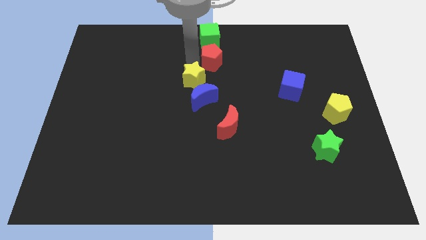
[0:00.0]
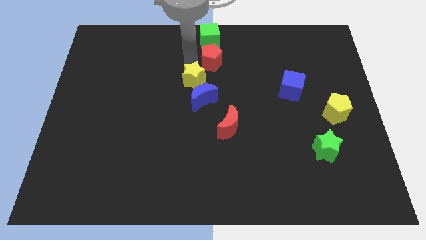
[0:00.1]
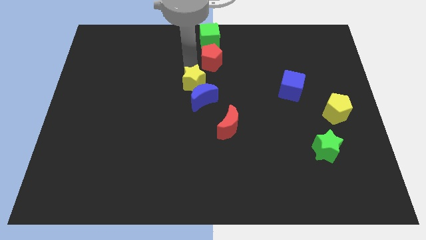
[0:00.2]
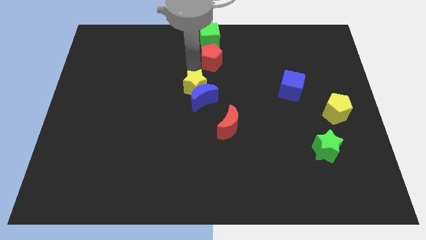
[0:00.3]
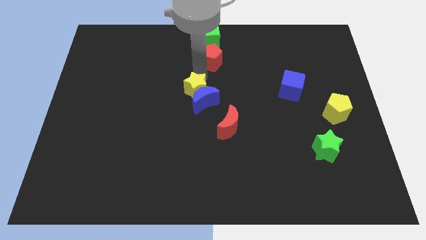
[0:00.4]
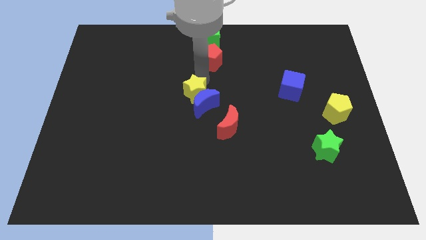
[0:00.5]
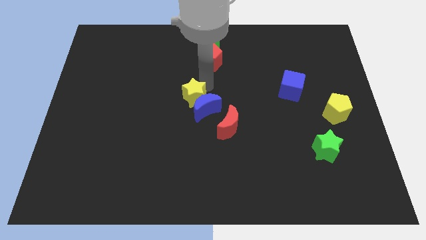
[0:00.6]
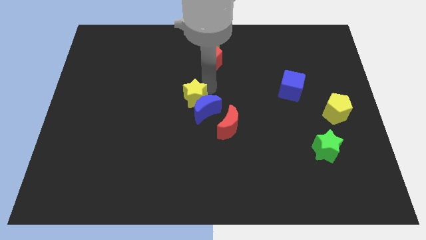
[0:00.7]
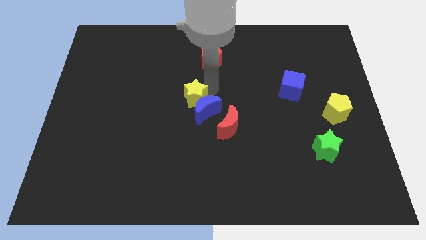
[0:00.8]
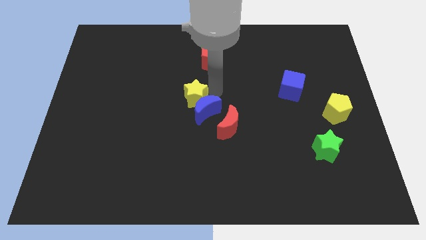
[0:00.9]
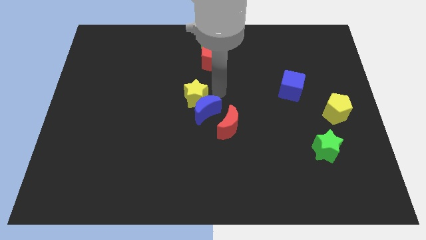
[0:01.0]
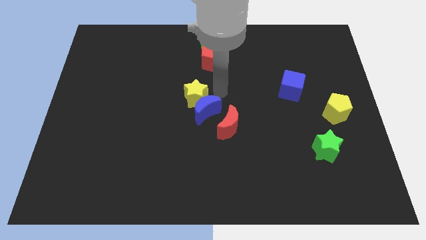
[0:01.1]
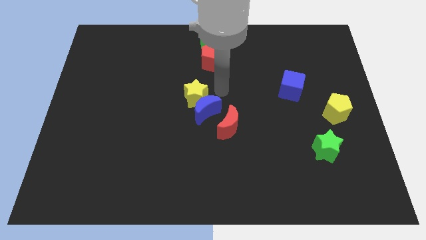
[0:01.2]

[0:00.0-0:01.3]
push the yellow star downwards

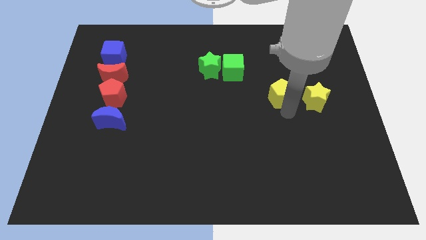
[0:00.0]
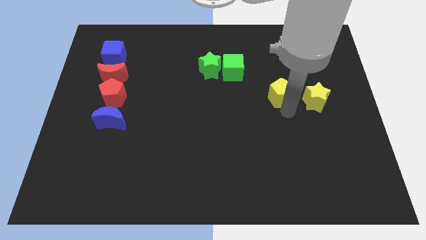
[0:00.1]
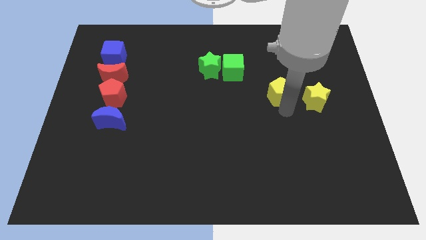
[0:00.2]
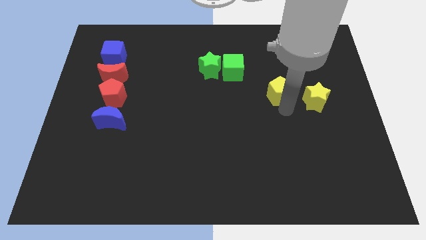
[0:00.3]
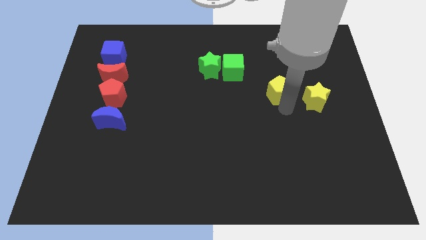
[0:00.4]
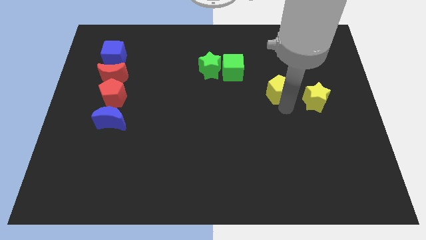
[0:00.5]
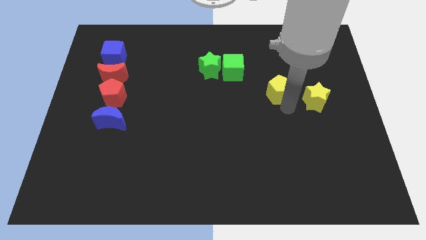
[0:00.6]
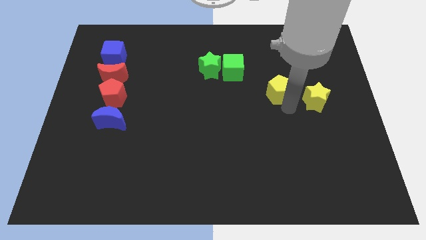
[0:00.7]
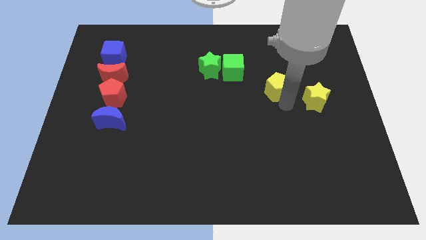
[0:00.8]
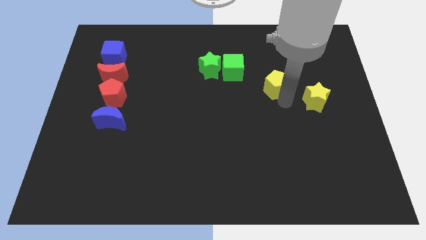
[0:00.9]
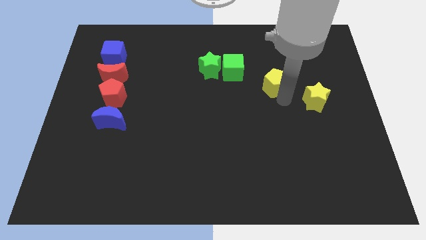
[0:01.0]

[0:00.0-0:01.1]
move the yellow pentagon to the top of the board

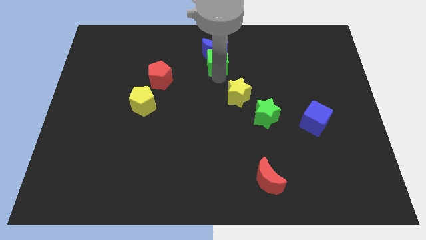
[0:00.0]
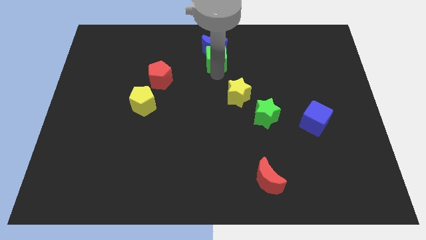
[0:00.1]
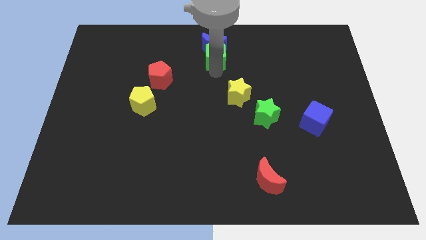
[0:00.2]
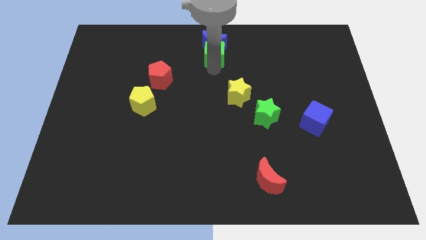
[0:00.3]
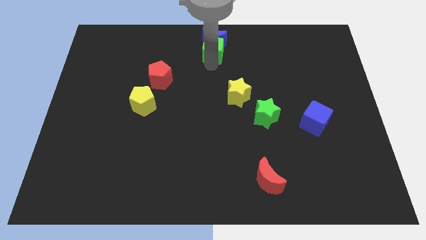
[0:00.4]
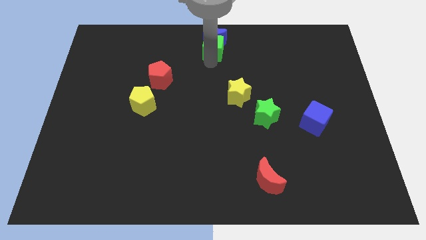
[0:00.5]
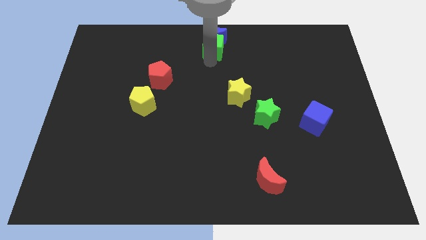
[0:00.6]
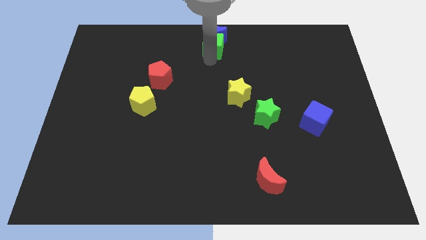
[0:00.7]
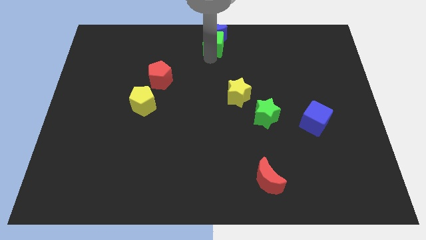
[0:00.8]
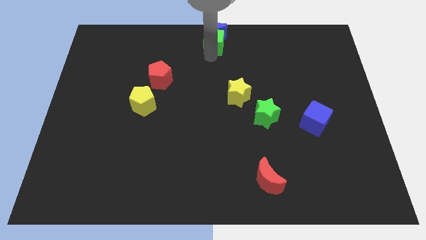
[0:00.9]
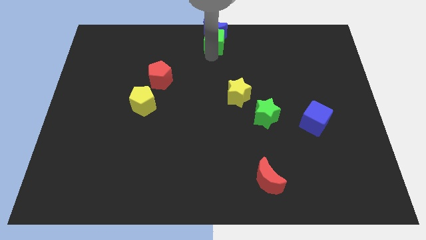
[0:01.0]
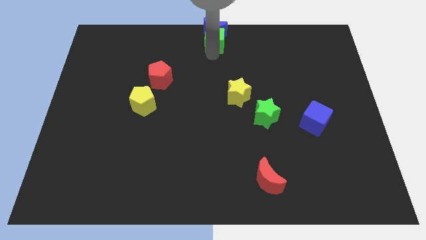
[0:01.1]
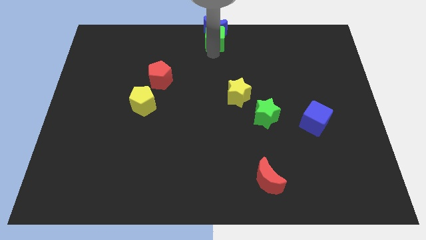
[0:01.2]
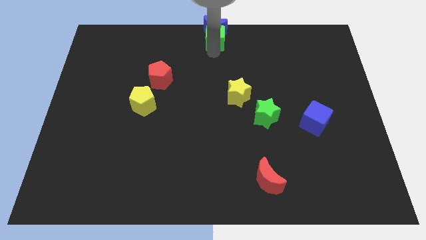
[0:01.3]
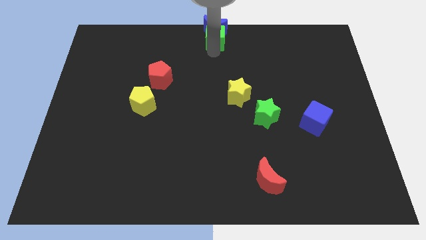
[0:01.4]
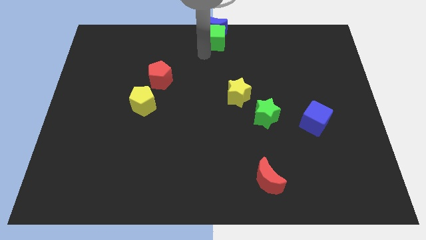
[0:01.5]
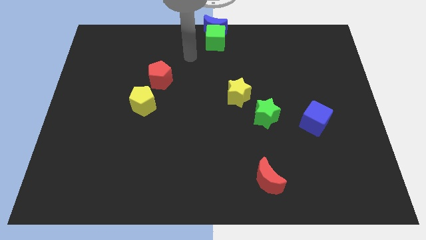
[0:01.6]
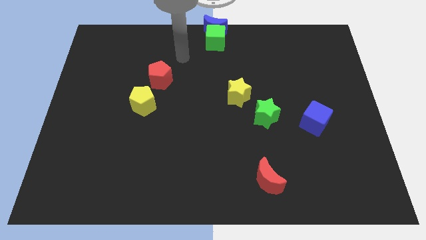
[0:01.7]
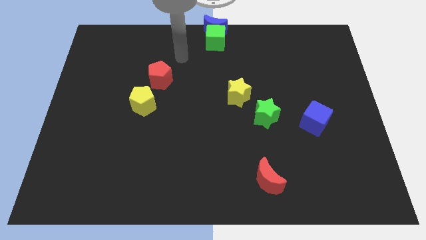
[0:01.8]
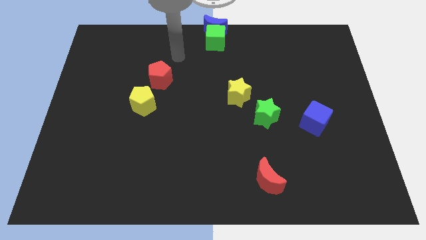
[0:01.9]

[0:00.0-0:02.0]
place the green cube and blue moon at the top center

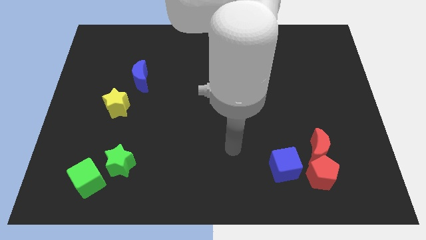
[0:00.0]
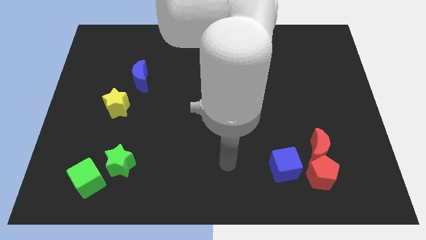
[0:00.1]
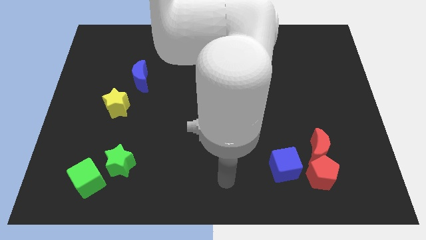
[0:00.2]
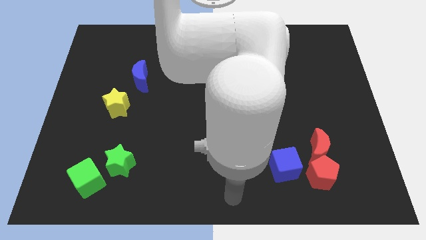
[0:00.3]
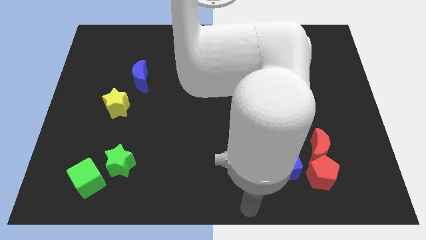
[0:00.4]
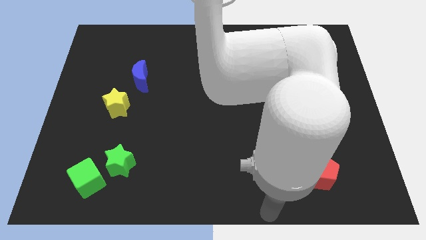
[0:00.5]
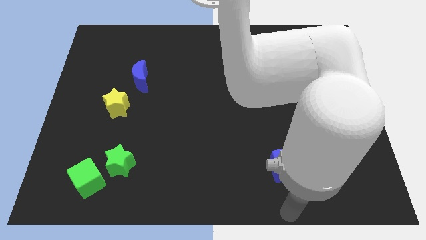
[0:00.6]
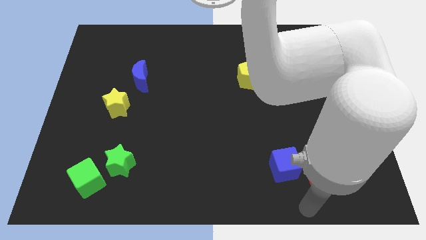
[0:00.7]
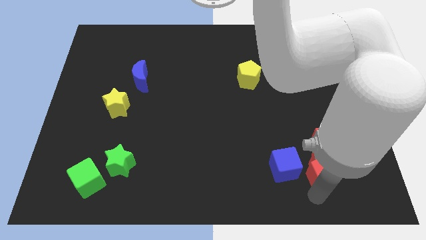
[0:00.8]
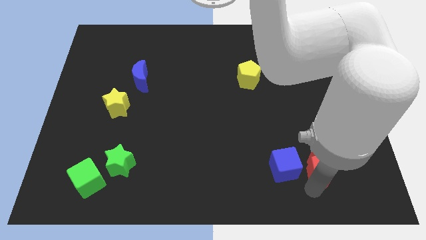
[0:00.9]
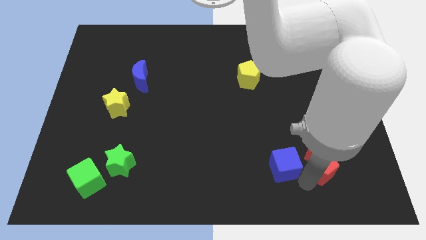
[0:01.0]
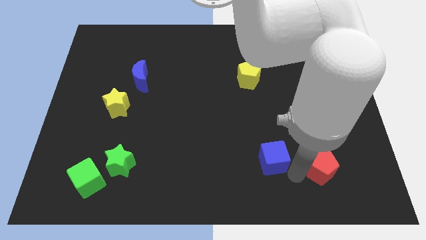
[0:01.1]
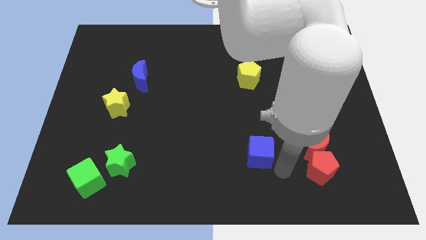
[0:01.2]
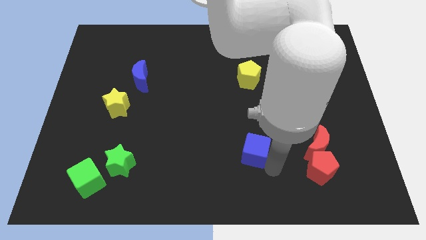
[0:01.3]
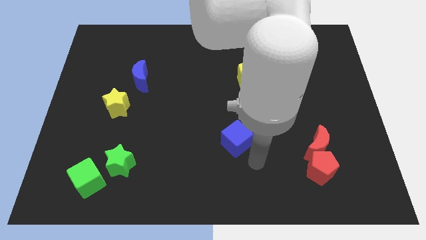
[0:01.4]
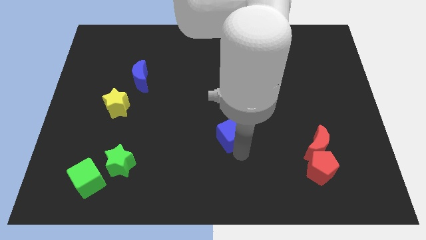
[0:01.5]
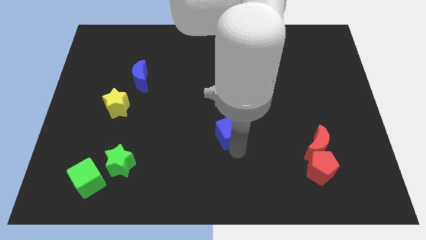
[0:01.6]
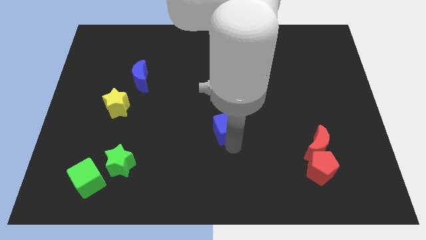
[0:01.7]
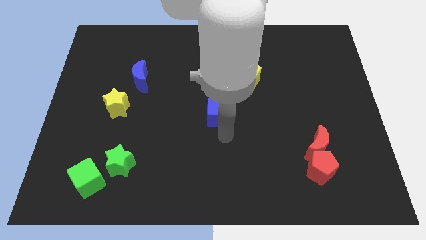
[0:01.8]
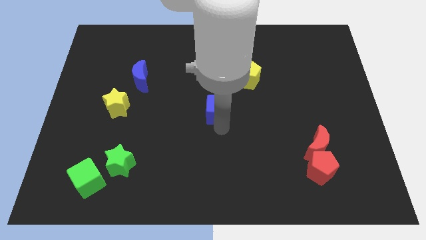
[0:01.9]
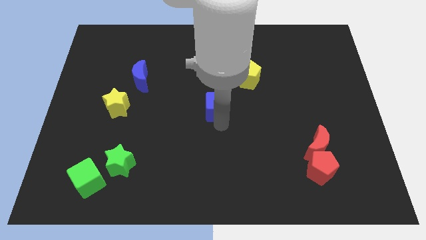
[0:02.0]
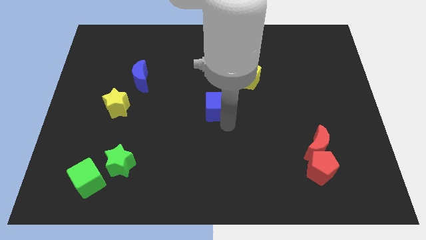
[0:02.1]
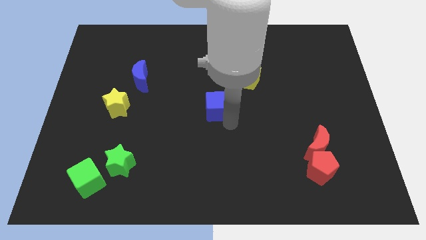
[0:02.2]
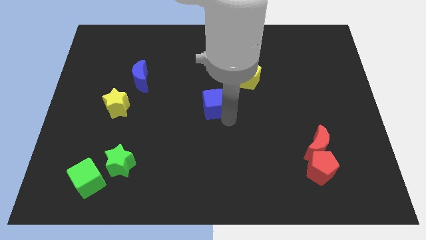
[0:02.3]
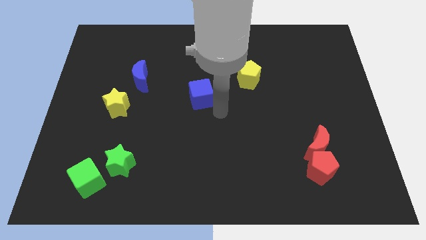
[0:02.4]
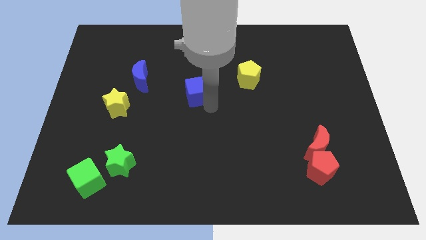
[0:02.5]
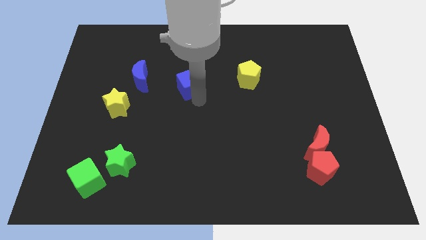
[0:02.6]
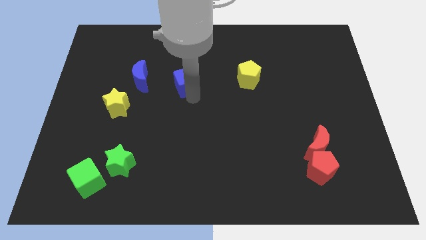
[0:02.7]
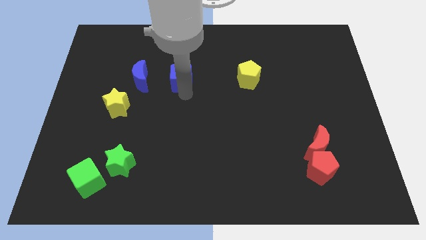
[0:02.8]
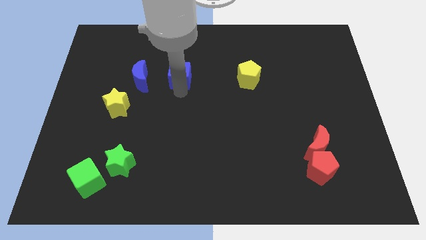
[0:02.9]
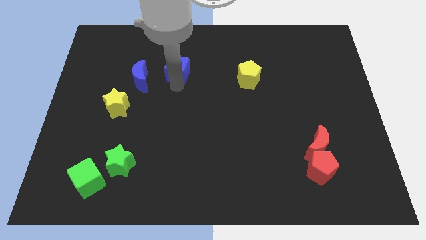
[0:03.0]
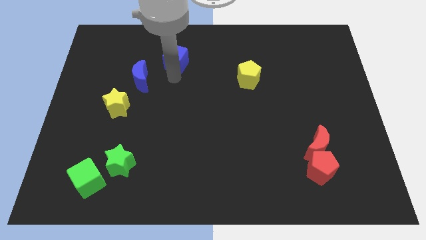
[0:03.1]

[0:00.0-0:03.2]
separate blue cube from red blocks

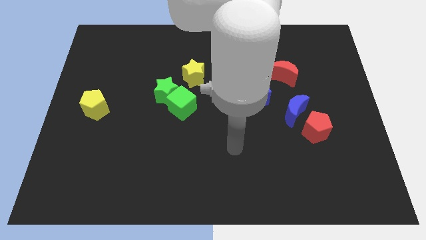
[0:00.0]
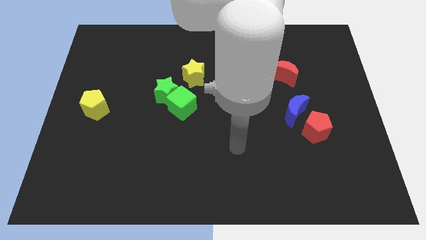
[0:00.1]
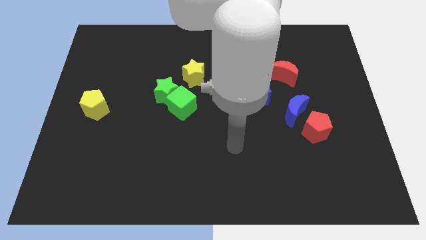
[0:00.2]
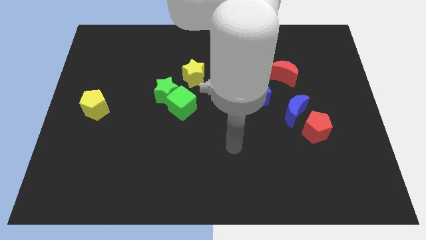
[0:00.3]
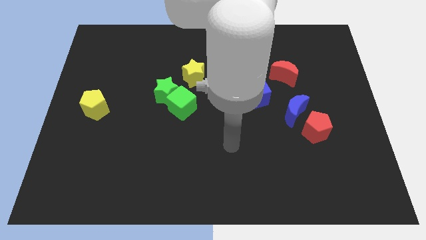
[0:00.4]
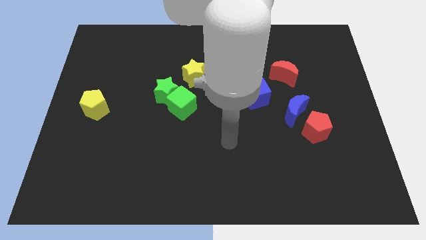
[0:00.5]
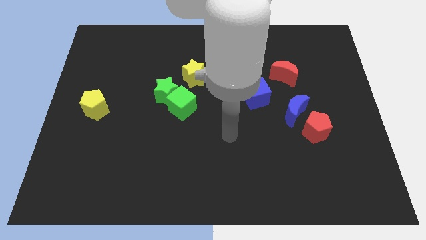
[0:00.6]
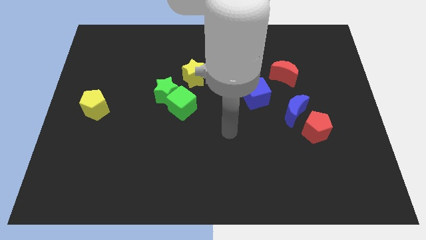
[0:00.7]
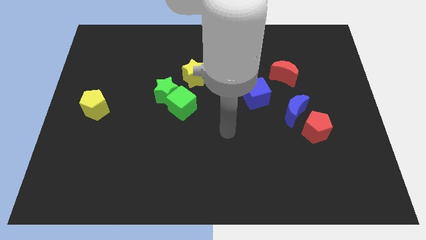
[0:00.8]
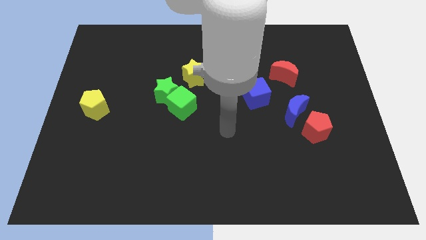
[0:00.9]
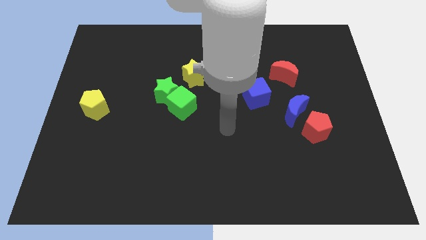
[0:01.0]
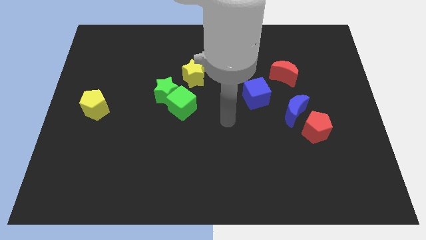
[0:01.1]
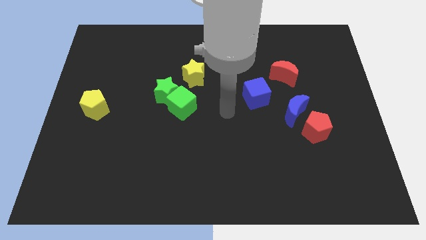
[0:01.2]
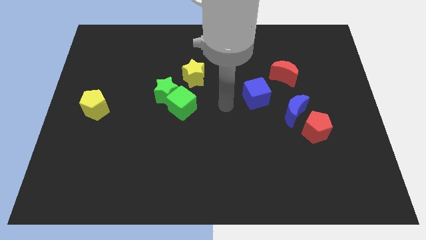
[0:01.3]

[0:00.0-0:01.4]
place arm in the center

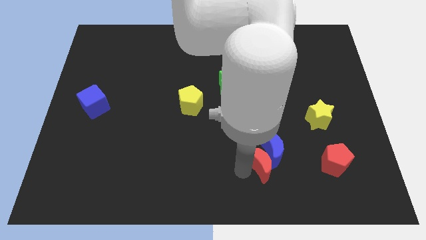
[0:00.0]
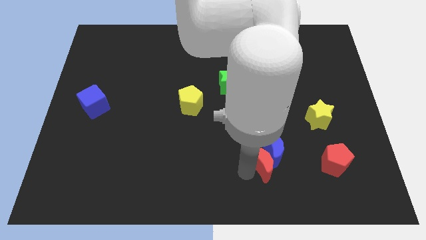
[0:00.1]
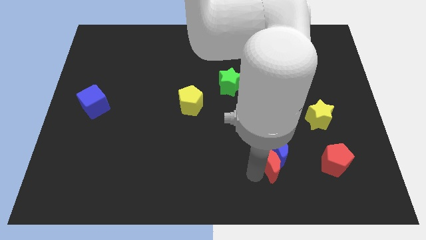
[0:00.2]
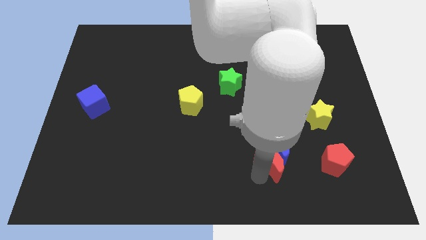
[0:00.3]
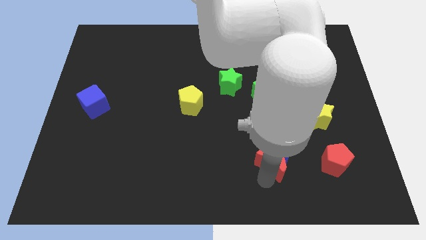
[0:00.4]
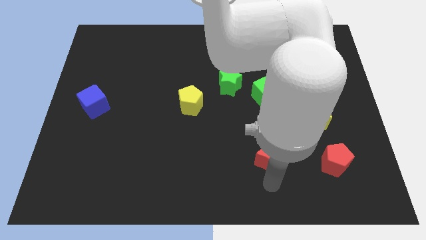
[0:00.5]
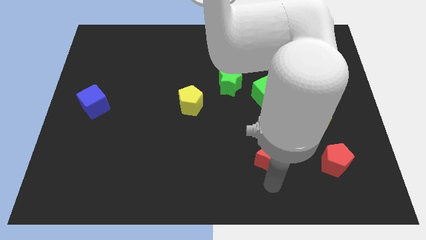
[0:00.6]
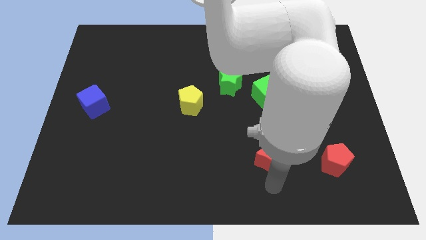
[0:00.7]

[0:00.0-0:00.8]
place the red moon to the left of the red pentagon
